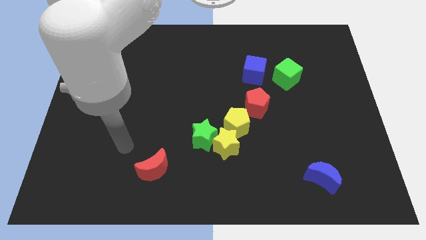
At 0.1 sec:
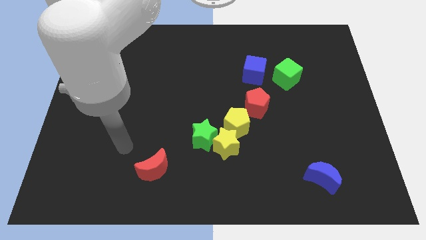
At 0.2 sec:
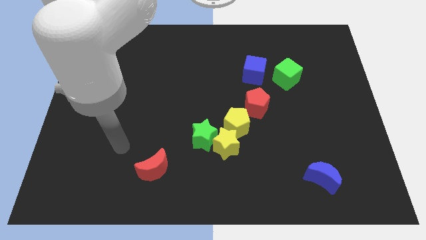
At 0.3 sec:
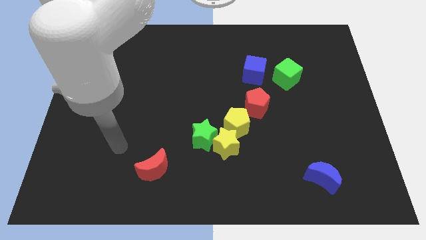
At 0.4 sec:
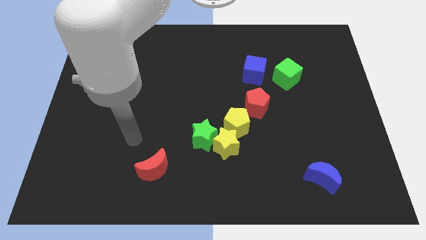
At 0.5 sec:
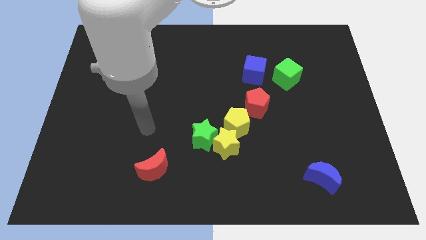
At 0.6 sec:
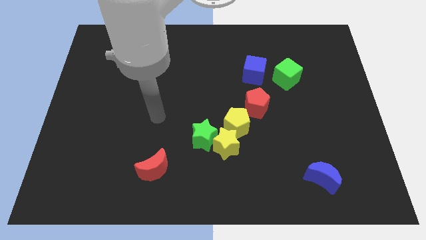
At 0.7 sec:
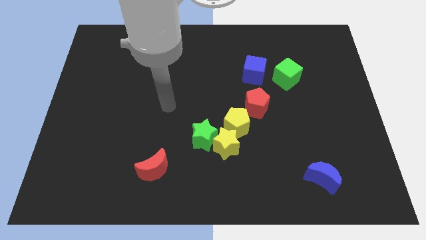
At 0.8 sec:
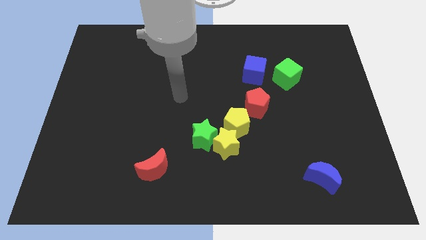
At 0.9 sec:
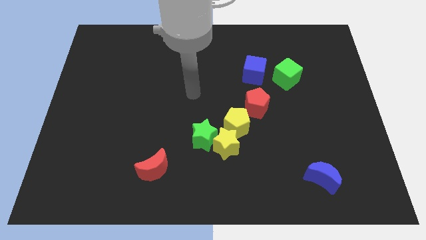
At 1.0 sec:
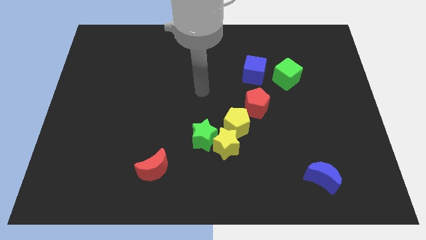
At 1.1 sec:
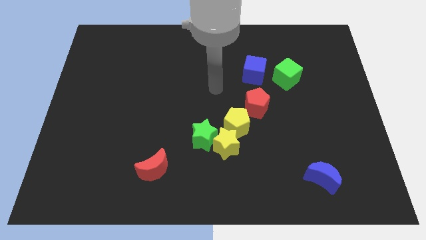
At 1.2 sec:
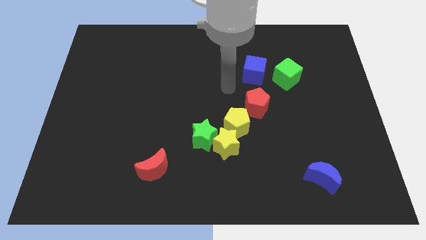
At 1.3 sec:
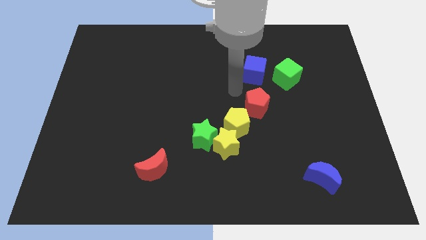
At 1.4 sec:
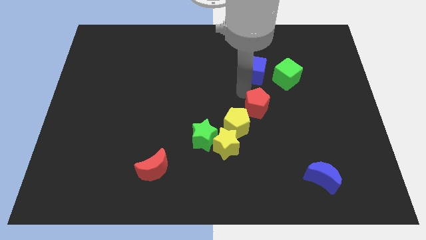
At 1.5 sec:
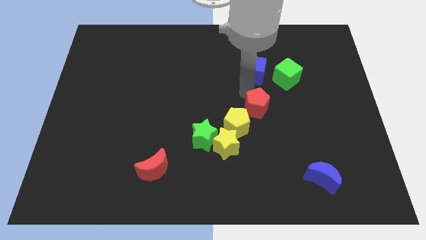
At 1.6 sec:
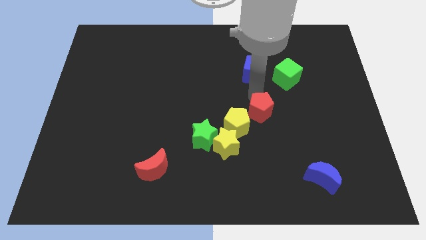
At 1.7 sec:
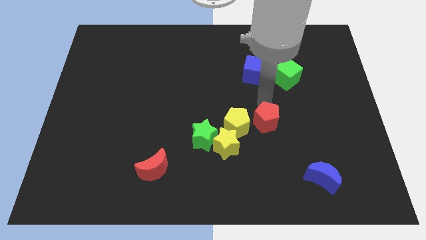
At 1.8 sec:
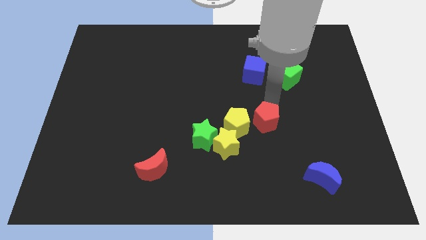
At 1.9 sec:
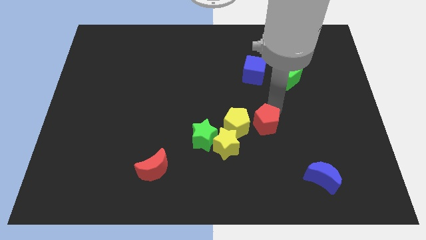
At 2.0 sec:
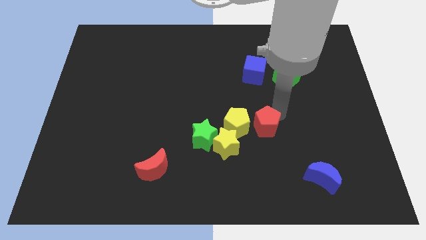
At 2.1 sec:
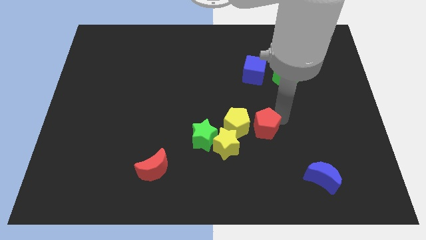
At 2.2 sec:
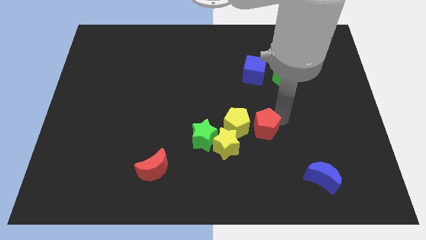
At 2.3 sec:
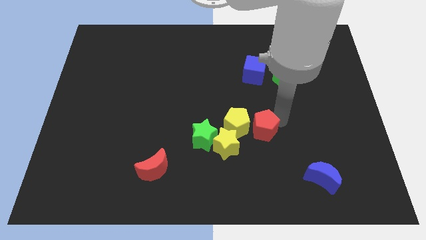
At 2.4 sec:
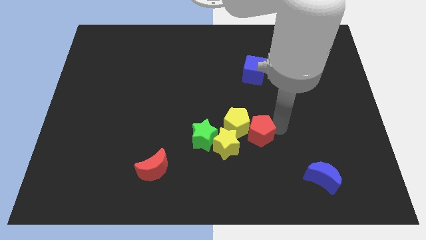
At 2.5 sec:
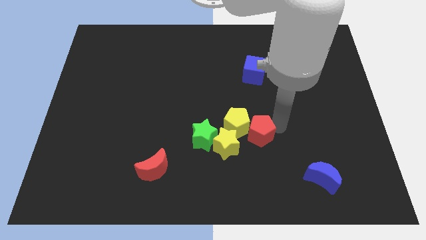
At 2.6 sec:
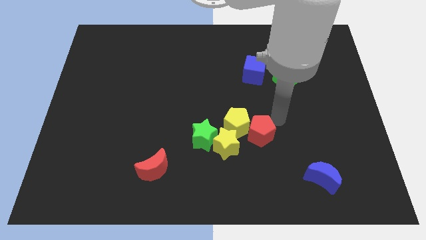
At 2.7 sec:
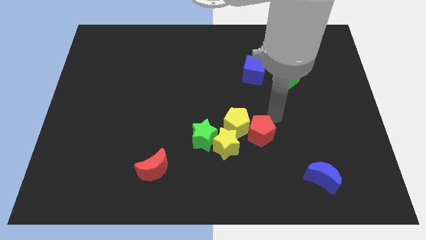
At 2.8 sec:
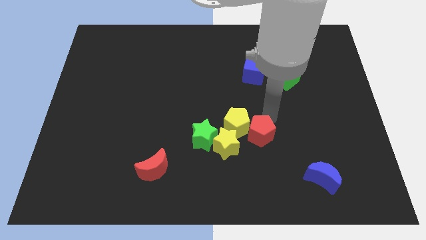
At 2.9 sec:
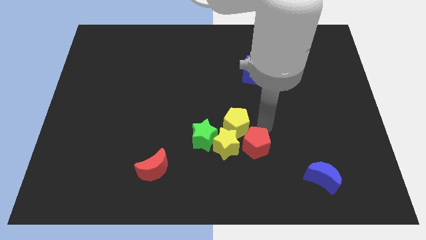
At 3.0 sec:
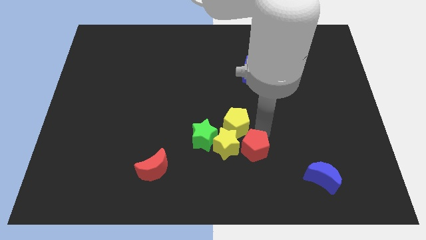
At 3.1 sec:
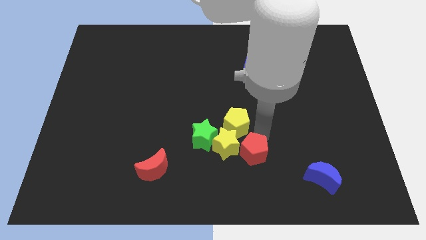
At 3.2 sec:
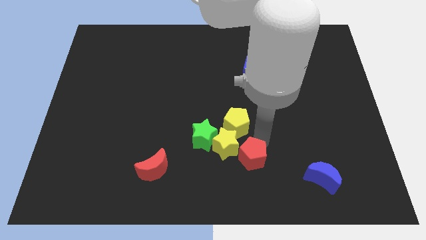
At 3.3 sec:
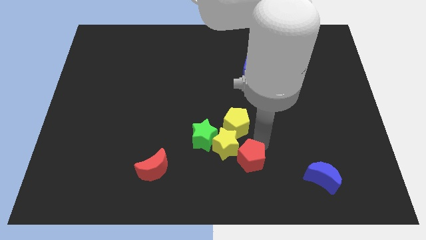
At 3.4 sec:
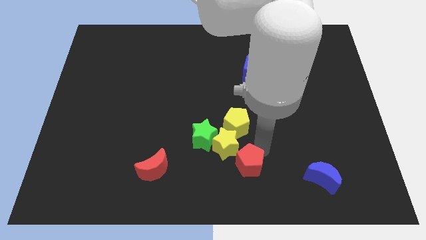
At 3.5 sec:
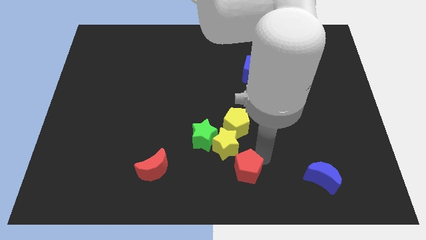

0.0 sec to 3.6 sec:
push the red pentagon to the bottom right of the yellow star

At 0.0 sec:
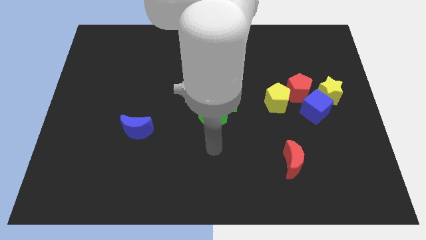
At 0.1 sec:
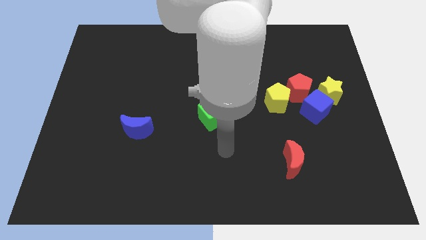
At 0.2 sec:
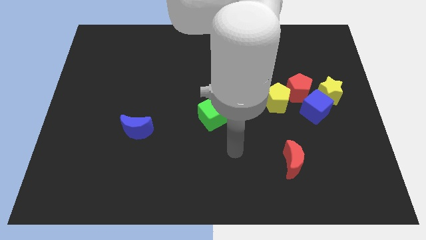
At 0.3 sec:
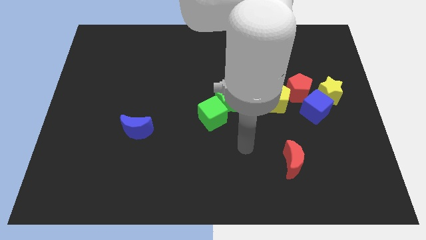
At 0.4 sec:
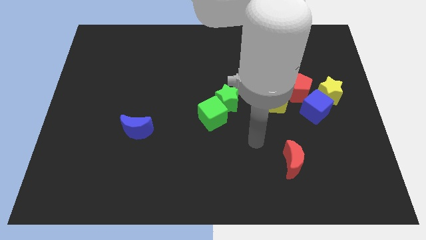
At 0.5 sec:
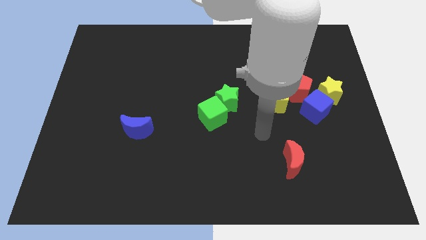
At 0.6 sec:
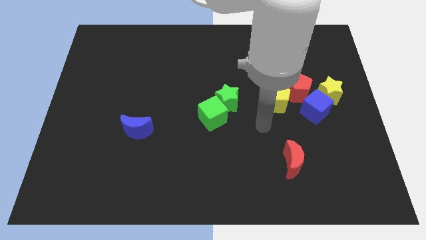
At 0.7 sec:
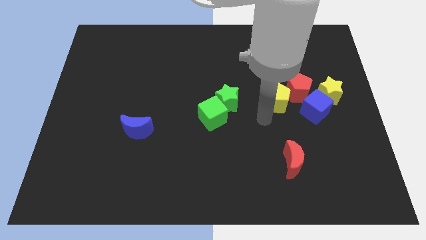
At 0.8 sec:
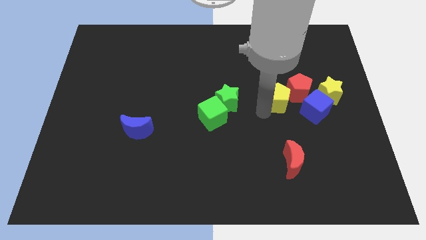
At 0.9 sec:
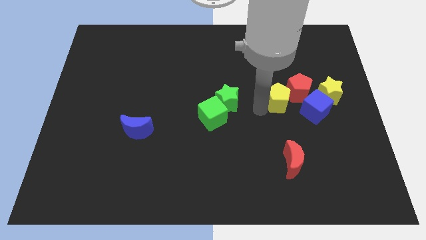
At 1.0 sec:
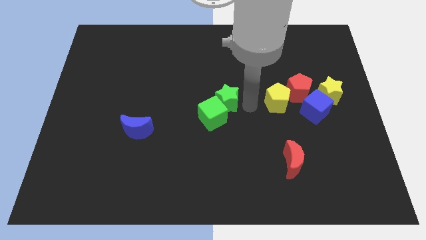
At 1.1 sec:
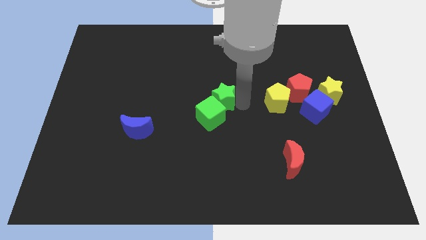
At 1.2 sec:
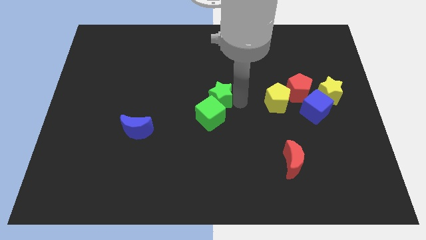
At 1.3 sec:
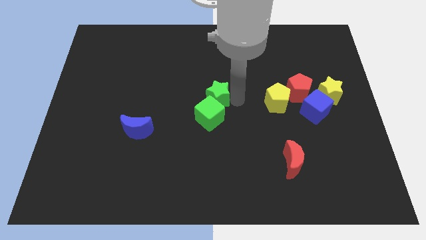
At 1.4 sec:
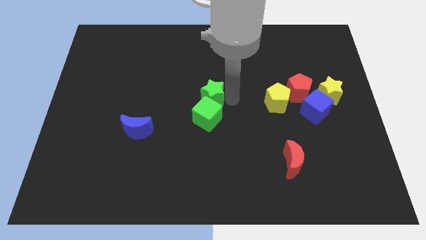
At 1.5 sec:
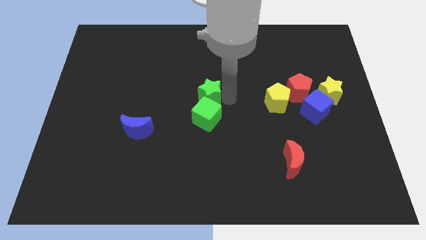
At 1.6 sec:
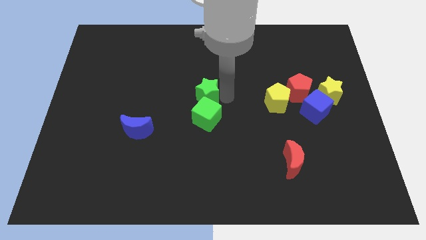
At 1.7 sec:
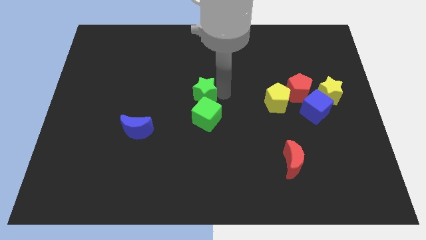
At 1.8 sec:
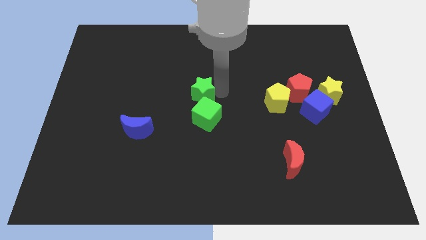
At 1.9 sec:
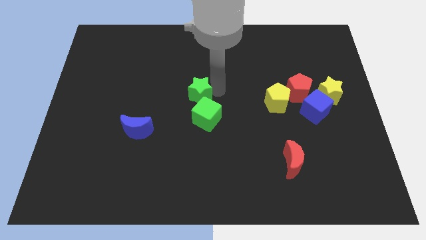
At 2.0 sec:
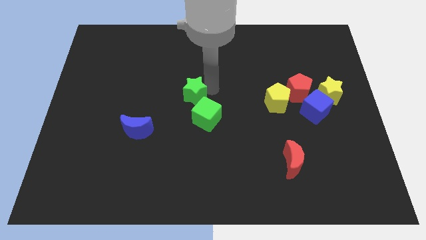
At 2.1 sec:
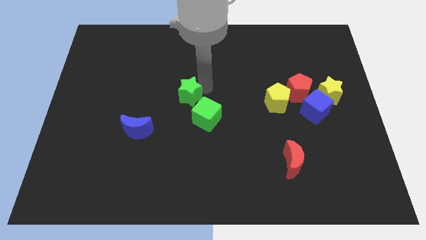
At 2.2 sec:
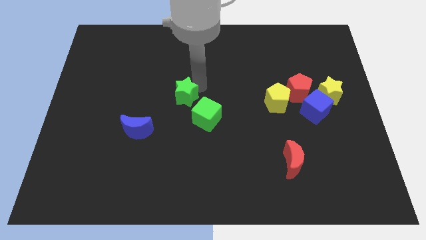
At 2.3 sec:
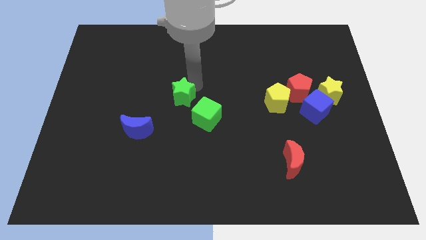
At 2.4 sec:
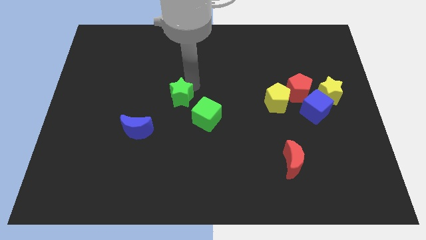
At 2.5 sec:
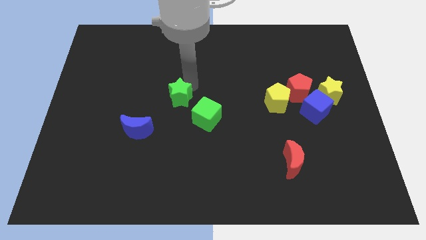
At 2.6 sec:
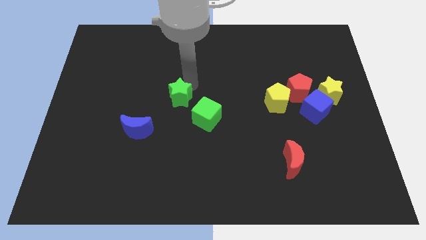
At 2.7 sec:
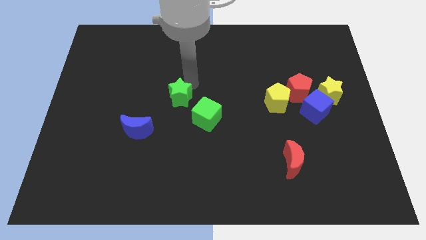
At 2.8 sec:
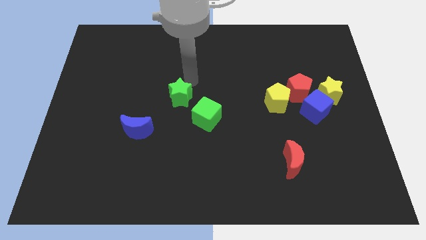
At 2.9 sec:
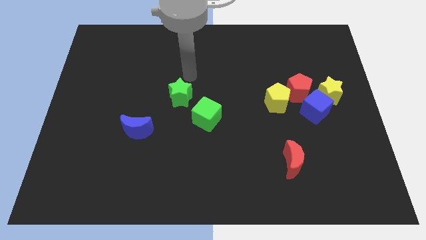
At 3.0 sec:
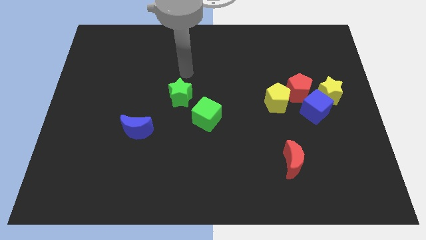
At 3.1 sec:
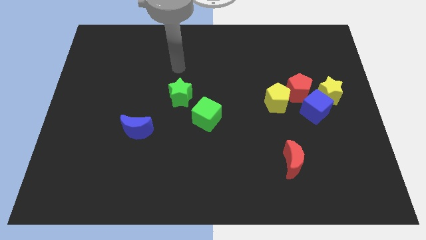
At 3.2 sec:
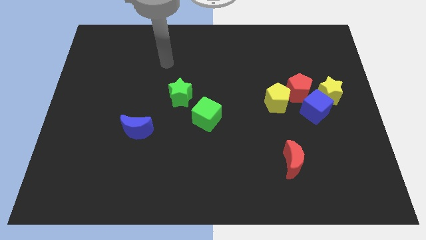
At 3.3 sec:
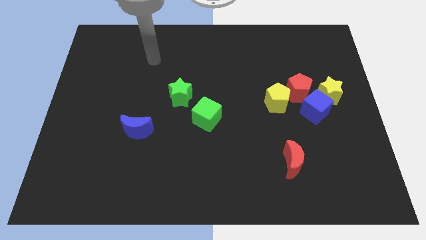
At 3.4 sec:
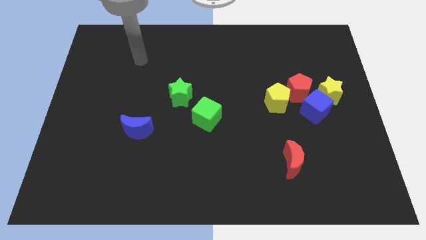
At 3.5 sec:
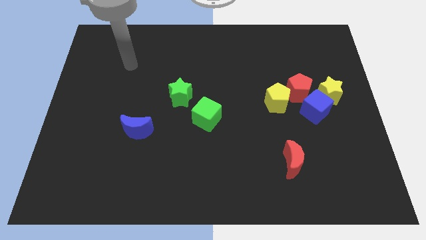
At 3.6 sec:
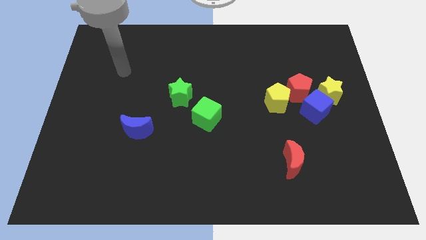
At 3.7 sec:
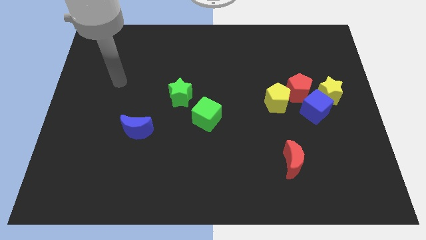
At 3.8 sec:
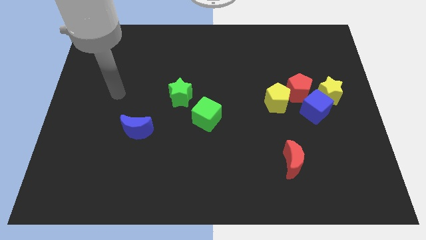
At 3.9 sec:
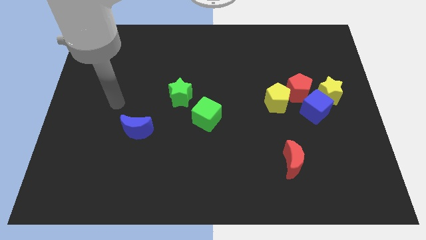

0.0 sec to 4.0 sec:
move the green star diagonally to the top left of the green cube

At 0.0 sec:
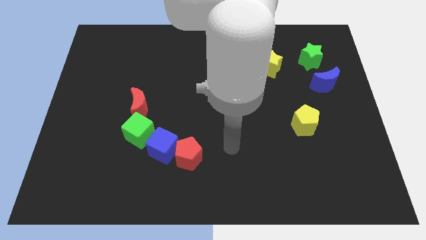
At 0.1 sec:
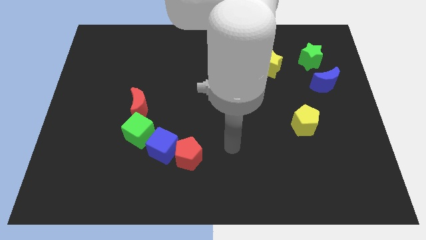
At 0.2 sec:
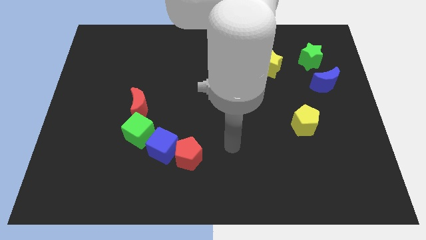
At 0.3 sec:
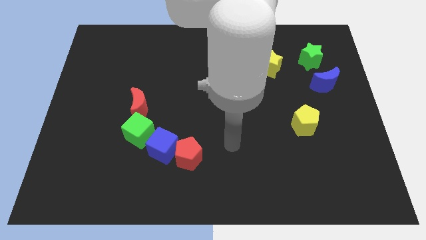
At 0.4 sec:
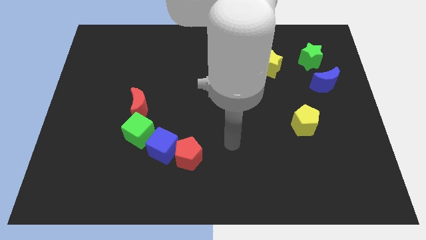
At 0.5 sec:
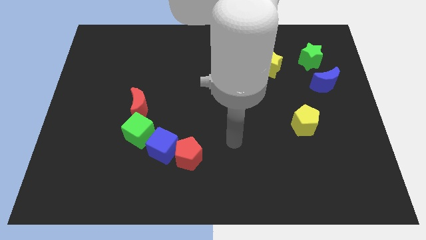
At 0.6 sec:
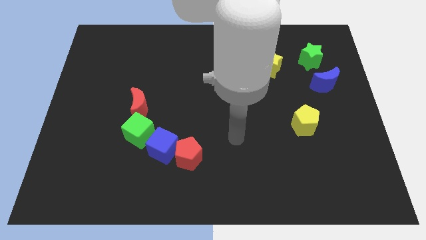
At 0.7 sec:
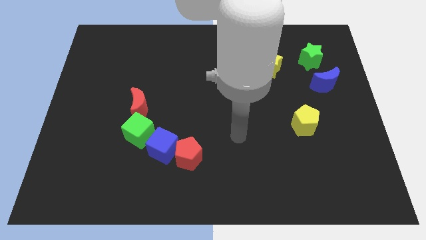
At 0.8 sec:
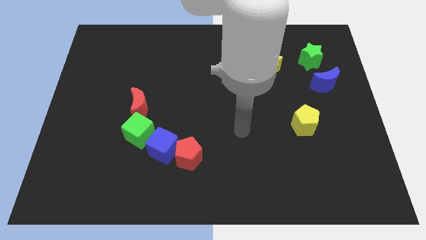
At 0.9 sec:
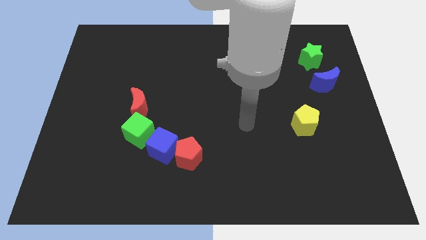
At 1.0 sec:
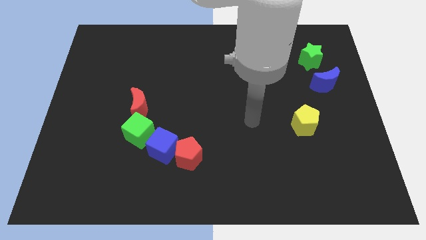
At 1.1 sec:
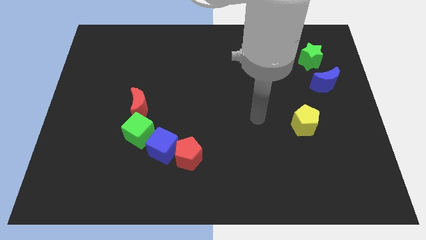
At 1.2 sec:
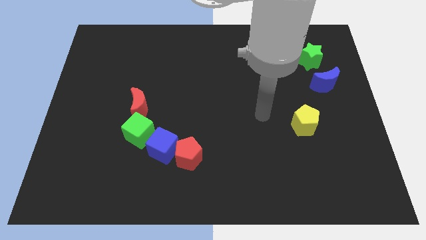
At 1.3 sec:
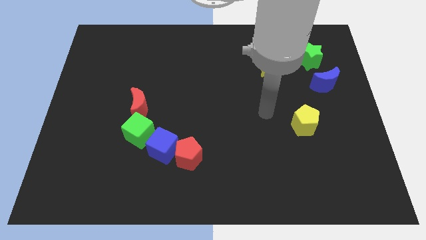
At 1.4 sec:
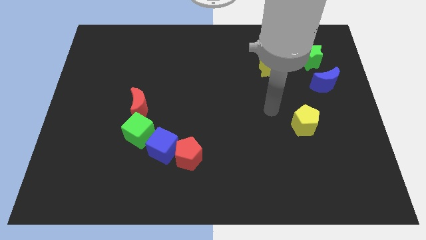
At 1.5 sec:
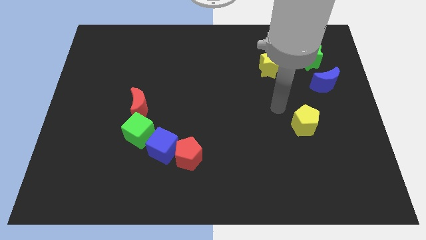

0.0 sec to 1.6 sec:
move your hand away from the red pentagon
